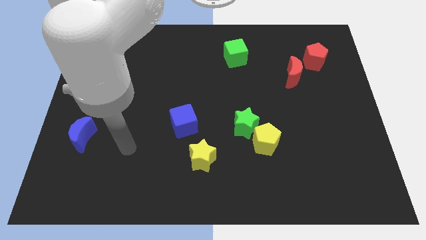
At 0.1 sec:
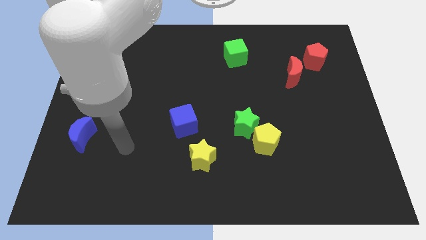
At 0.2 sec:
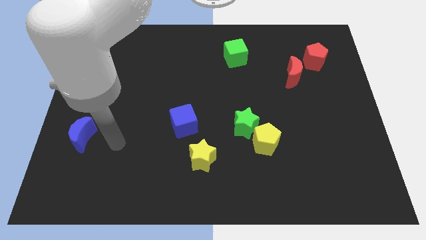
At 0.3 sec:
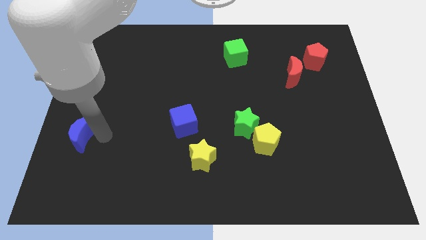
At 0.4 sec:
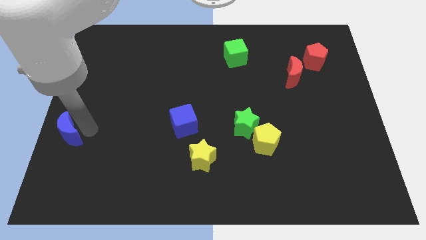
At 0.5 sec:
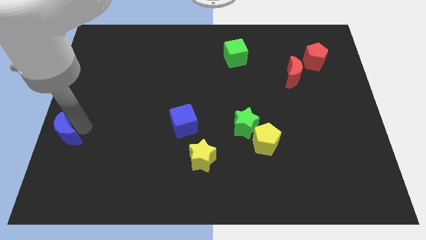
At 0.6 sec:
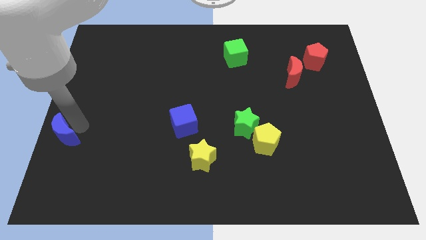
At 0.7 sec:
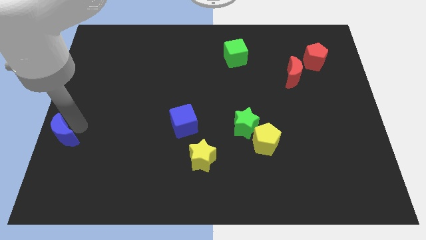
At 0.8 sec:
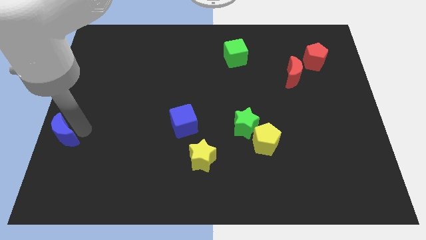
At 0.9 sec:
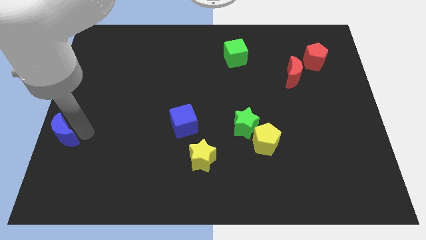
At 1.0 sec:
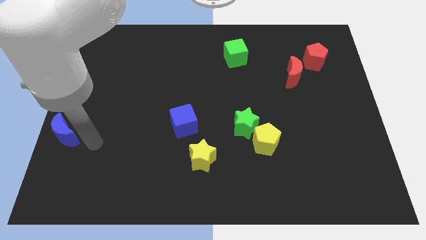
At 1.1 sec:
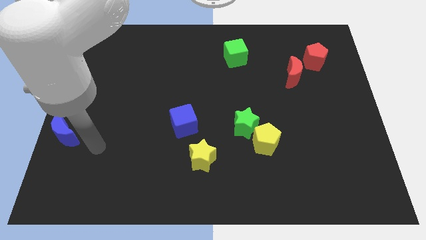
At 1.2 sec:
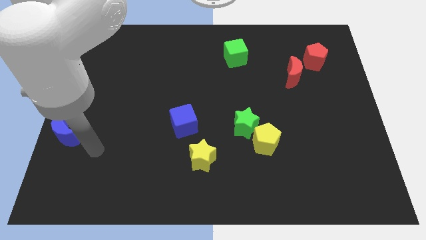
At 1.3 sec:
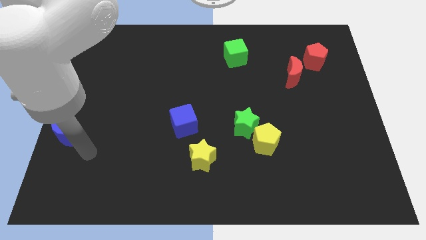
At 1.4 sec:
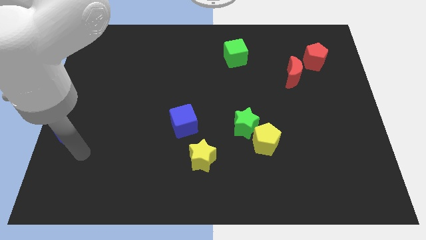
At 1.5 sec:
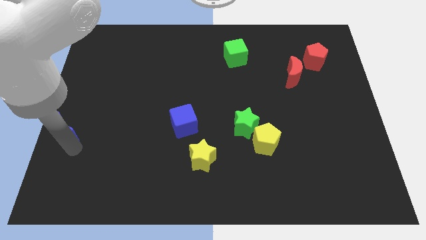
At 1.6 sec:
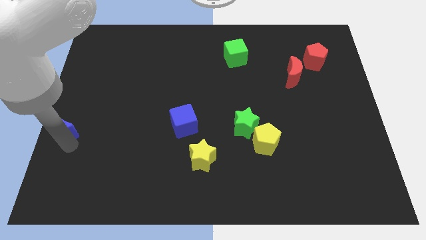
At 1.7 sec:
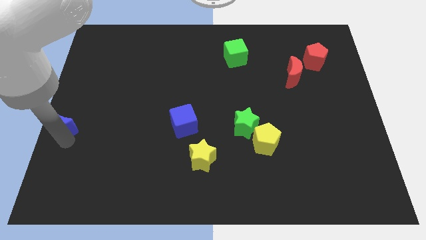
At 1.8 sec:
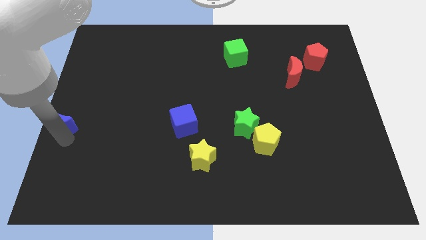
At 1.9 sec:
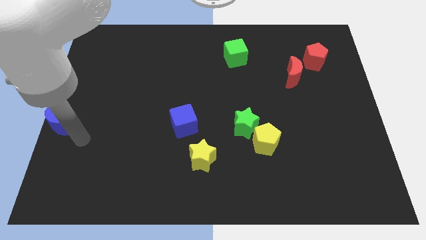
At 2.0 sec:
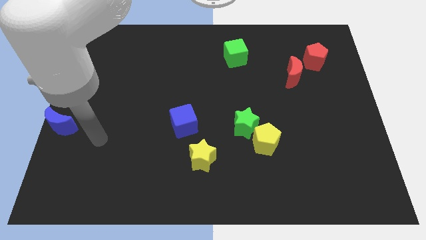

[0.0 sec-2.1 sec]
slide the blue moon to the left

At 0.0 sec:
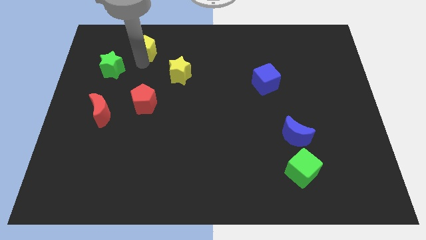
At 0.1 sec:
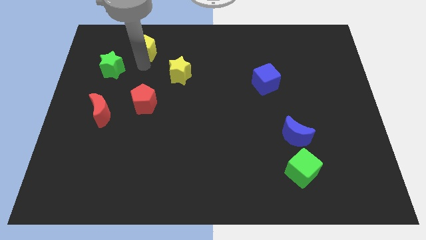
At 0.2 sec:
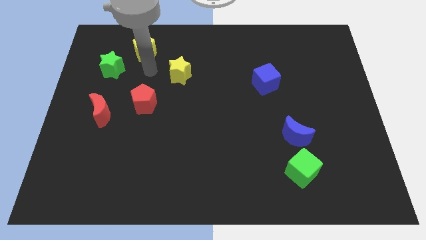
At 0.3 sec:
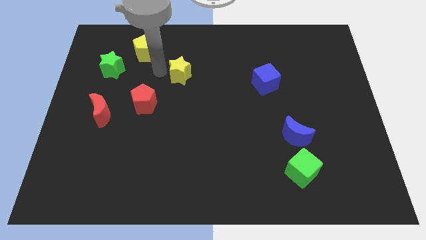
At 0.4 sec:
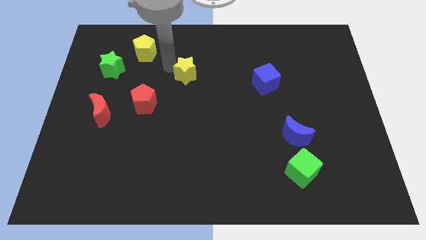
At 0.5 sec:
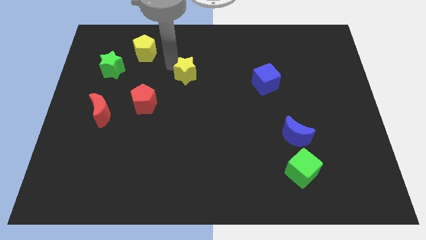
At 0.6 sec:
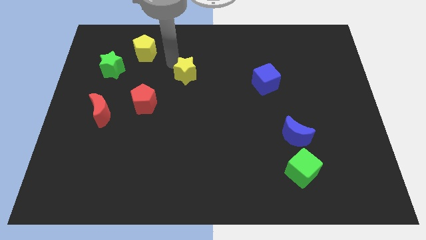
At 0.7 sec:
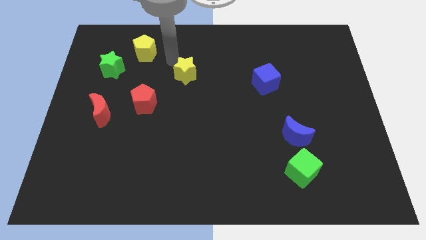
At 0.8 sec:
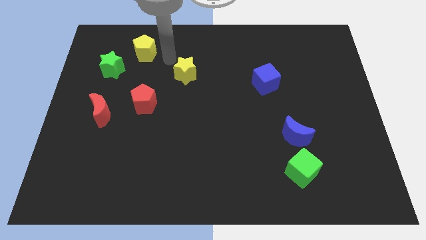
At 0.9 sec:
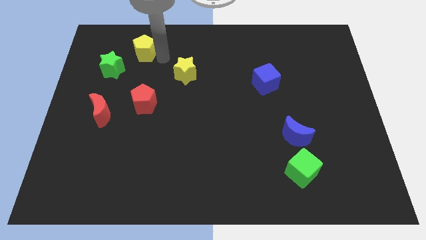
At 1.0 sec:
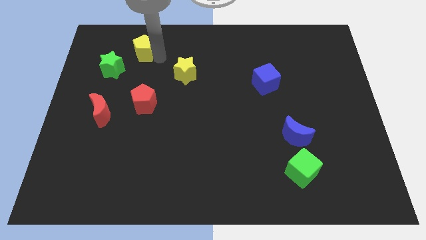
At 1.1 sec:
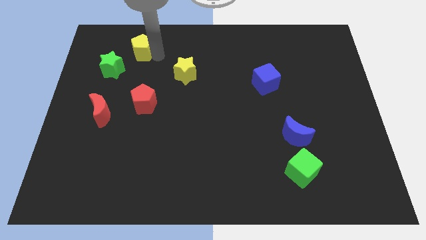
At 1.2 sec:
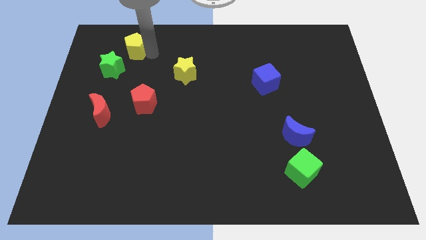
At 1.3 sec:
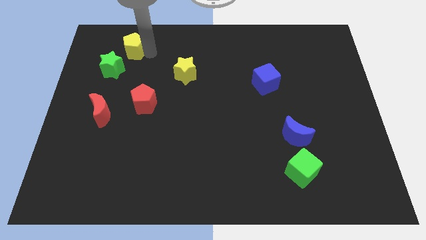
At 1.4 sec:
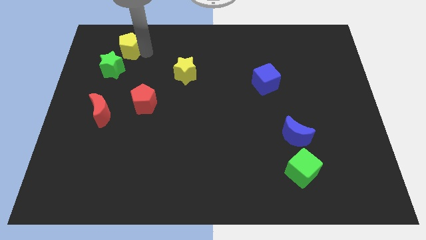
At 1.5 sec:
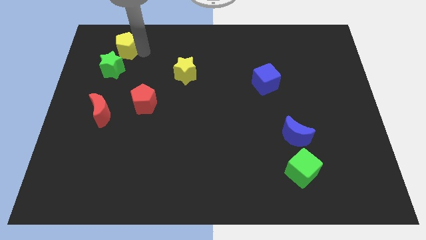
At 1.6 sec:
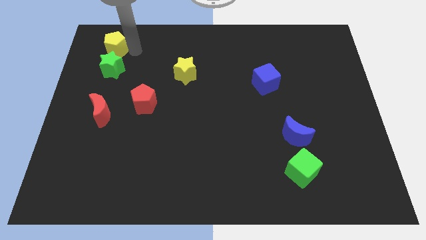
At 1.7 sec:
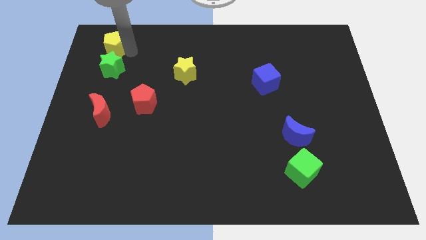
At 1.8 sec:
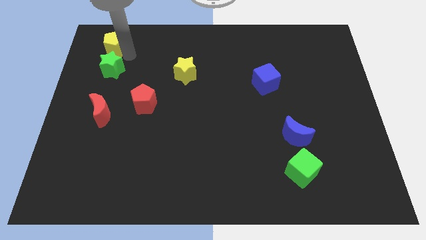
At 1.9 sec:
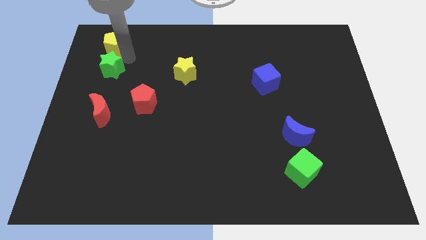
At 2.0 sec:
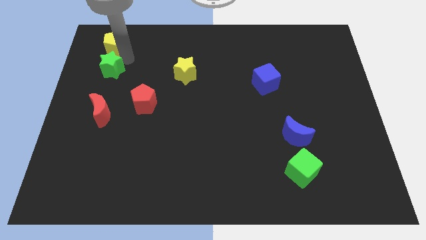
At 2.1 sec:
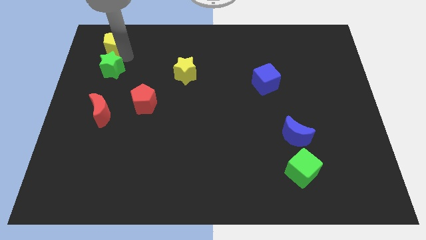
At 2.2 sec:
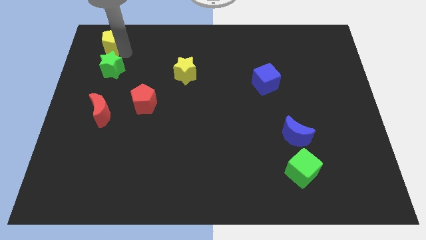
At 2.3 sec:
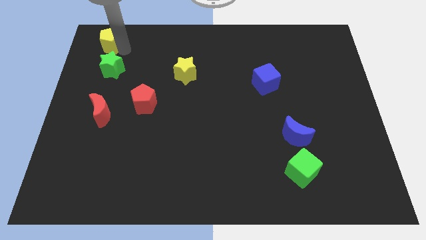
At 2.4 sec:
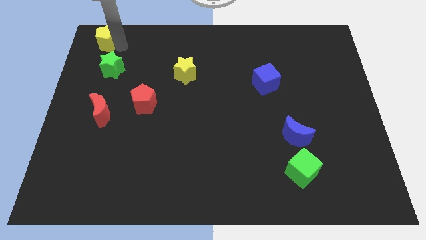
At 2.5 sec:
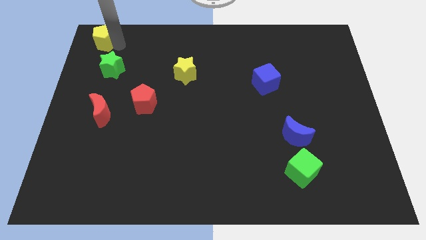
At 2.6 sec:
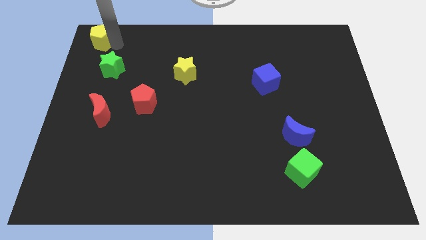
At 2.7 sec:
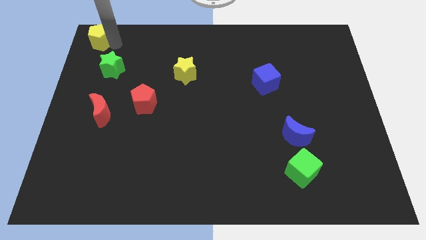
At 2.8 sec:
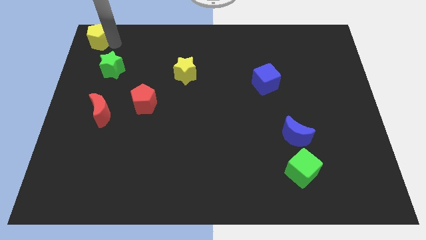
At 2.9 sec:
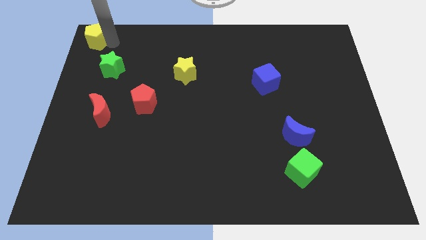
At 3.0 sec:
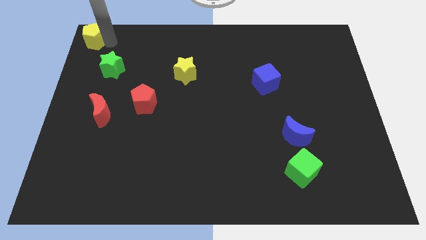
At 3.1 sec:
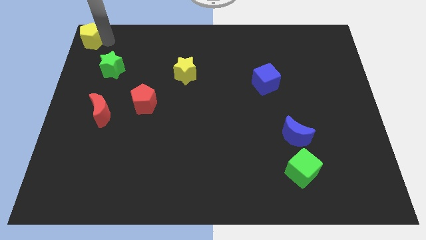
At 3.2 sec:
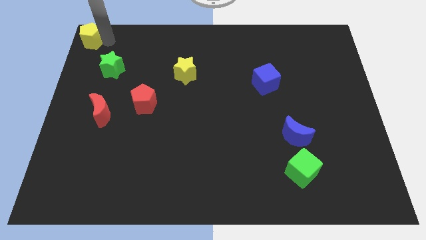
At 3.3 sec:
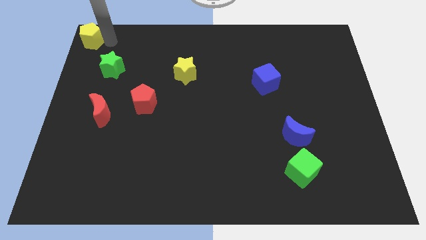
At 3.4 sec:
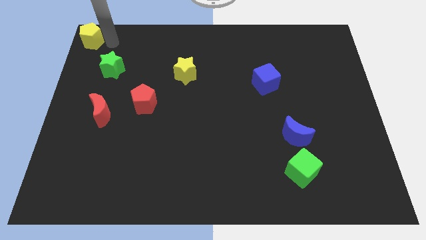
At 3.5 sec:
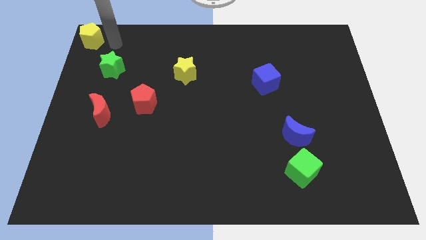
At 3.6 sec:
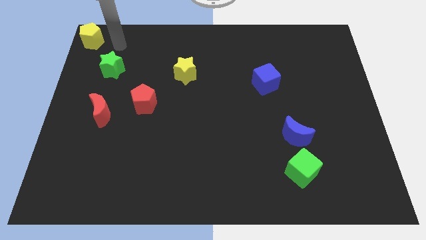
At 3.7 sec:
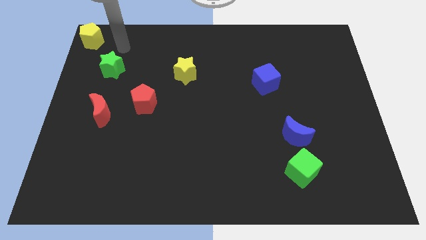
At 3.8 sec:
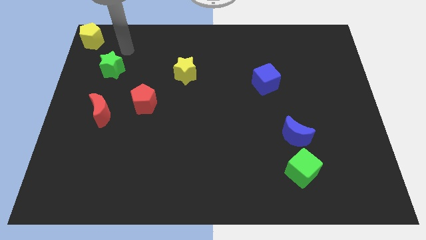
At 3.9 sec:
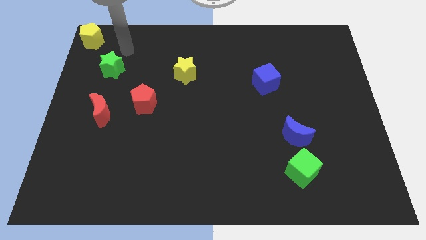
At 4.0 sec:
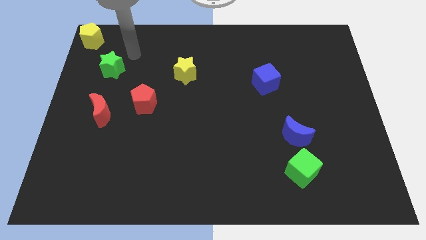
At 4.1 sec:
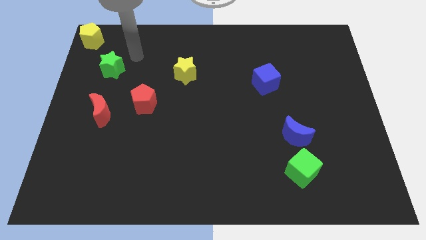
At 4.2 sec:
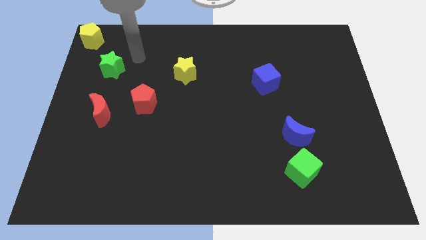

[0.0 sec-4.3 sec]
place the yellow pentagon to the top left of the board

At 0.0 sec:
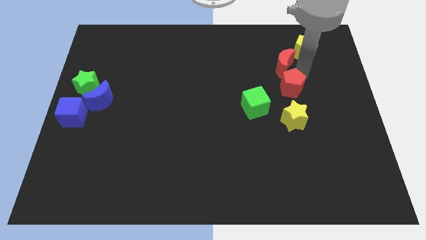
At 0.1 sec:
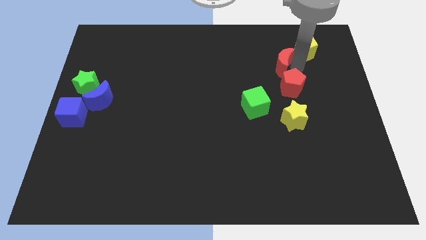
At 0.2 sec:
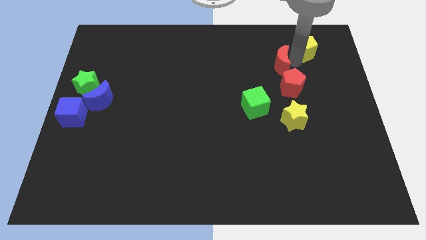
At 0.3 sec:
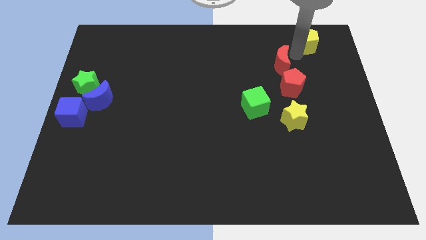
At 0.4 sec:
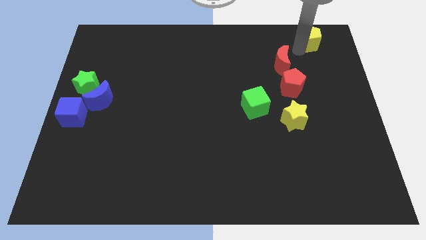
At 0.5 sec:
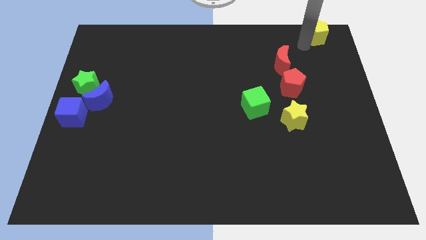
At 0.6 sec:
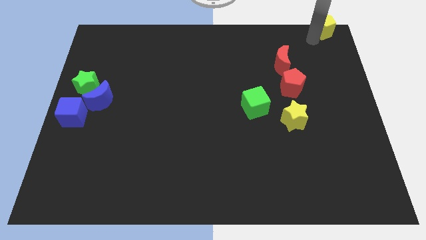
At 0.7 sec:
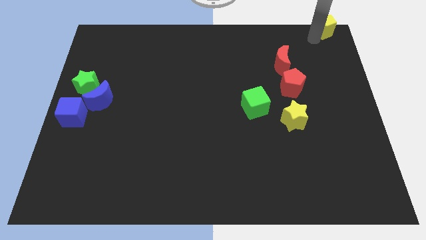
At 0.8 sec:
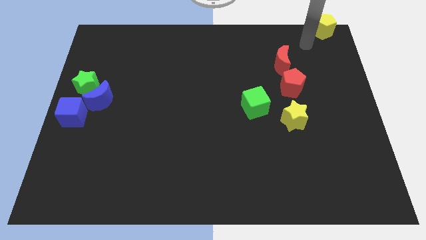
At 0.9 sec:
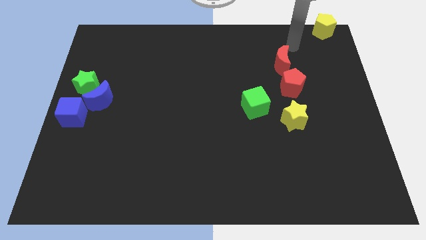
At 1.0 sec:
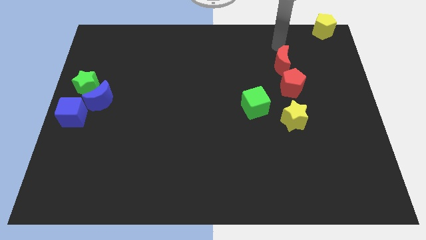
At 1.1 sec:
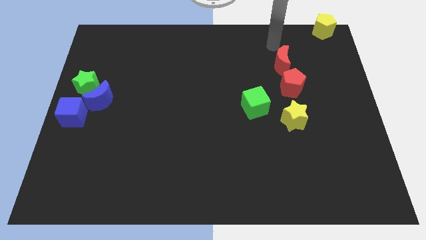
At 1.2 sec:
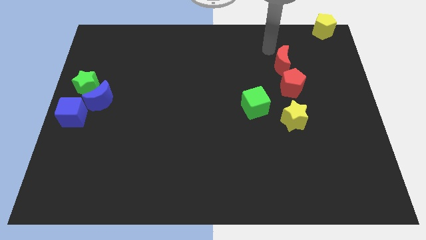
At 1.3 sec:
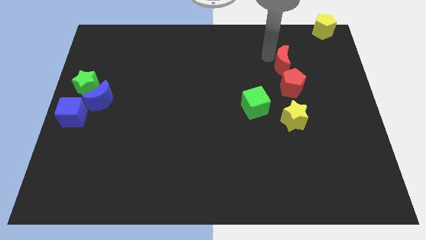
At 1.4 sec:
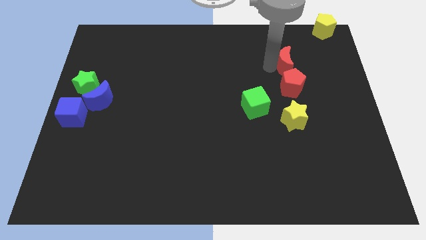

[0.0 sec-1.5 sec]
move the yellow pentagon towards the right top corner

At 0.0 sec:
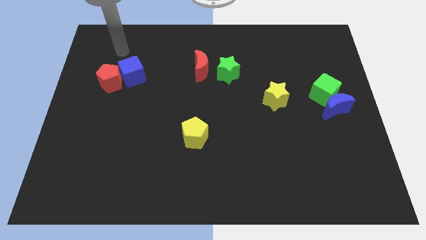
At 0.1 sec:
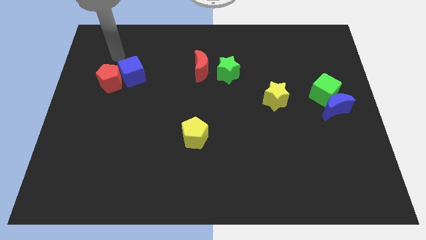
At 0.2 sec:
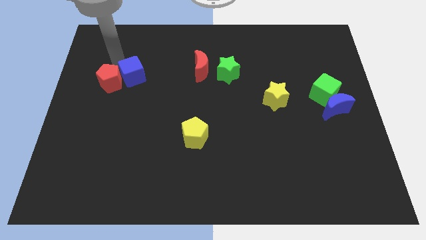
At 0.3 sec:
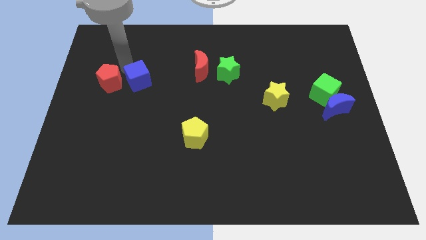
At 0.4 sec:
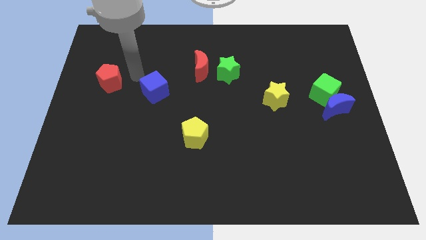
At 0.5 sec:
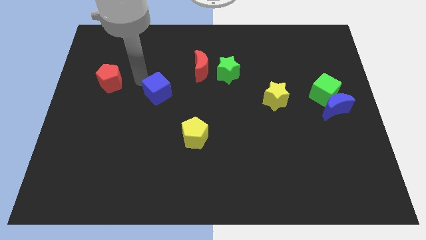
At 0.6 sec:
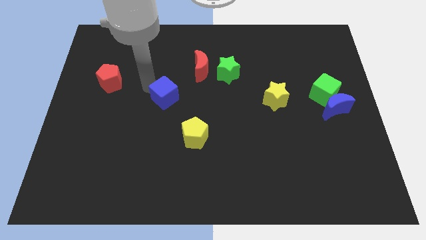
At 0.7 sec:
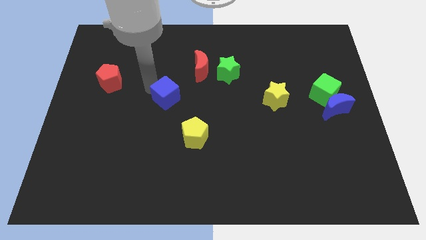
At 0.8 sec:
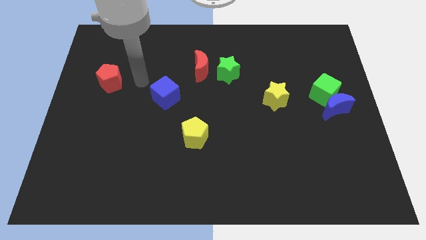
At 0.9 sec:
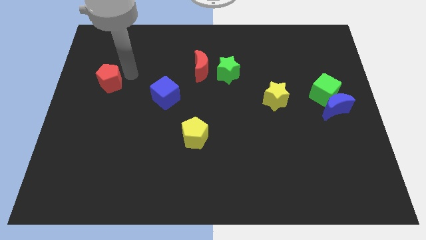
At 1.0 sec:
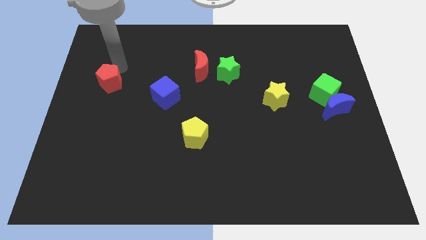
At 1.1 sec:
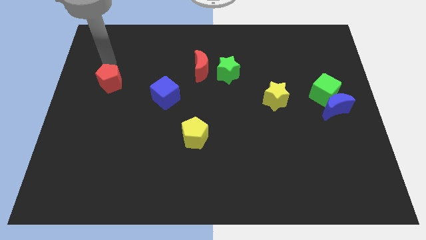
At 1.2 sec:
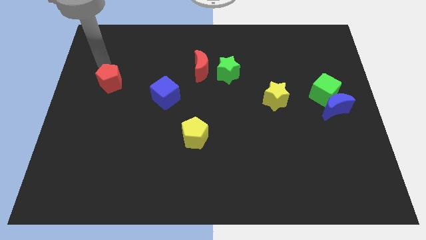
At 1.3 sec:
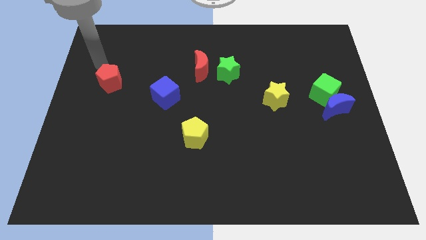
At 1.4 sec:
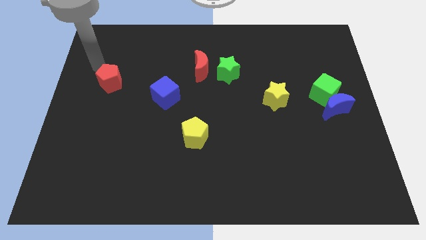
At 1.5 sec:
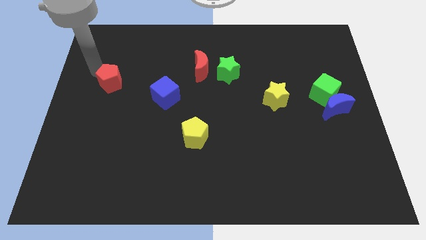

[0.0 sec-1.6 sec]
separate the blue moon from the red pentagon
